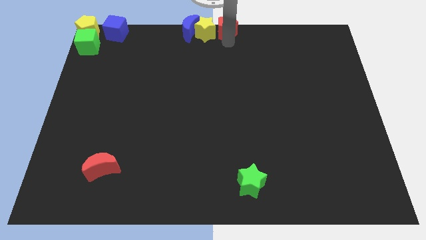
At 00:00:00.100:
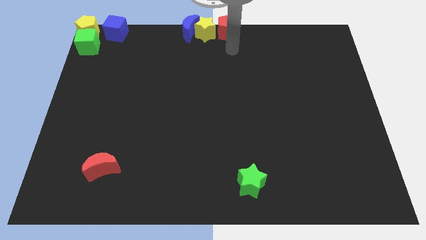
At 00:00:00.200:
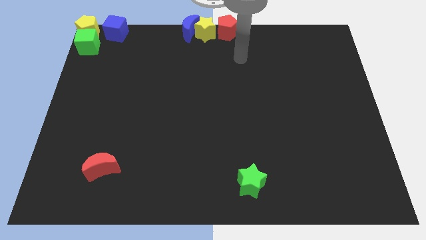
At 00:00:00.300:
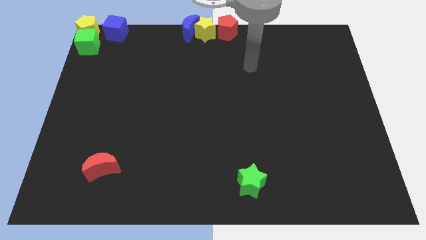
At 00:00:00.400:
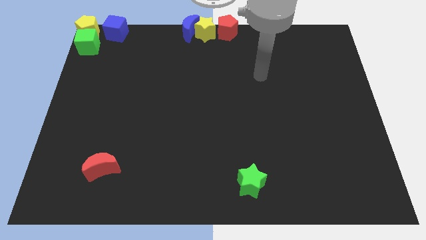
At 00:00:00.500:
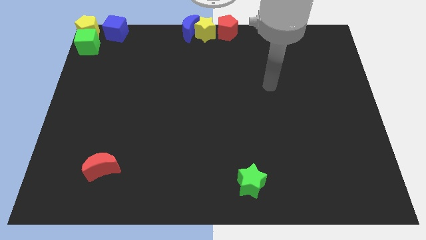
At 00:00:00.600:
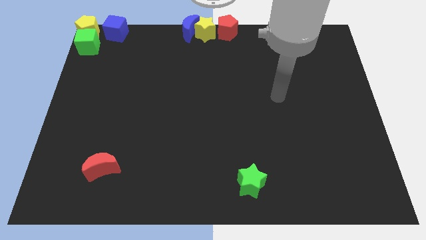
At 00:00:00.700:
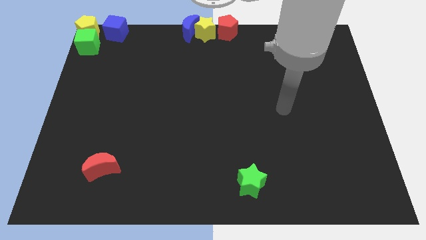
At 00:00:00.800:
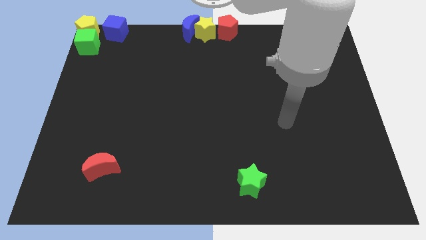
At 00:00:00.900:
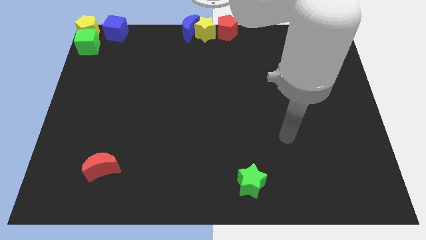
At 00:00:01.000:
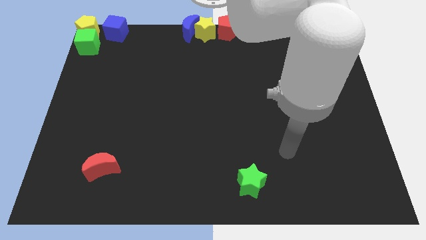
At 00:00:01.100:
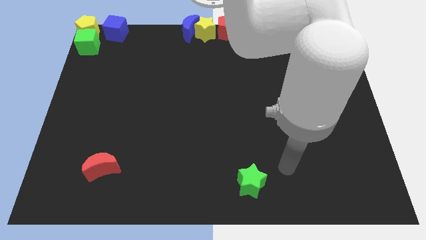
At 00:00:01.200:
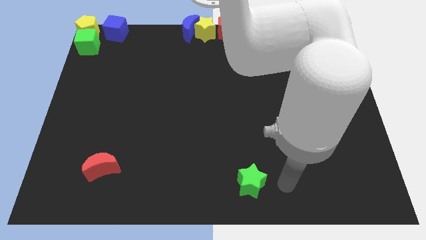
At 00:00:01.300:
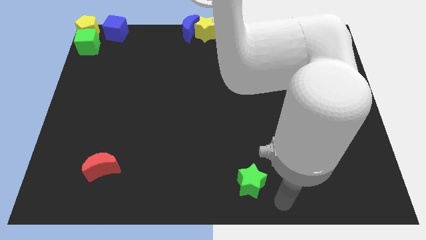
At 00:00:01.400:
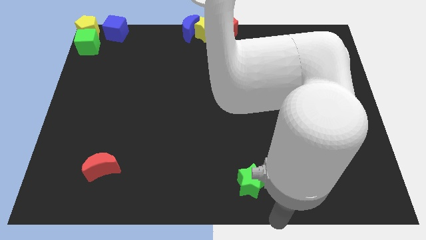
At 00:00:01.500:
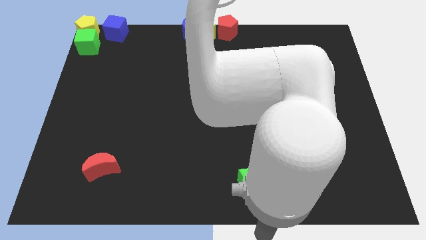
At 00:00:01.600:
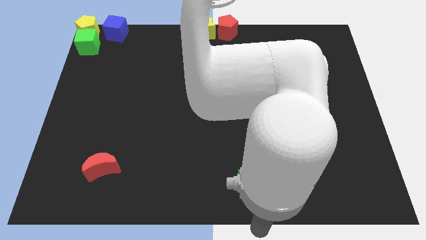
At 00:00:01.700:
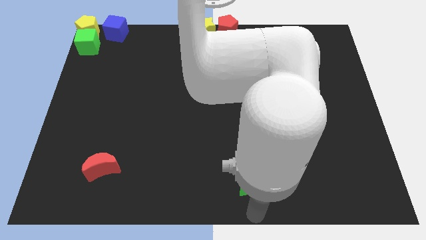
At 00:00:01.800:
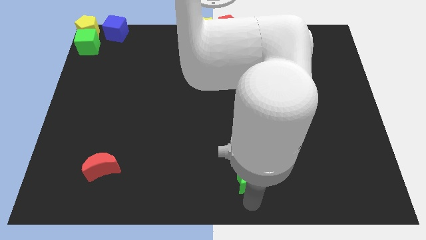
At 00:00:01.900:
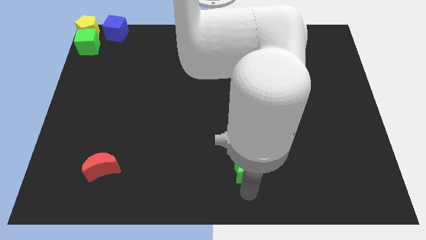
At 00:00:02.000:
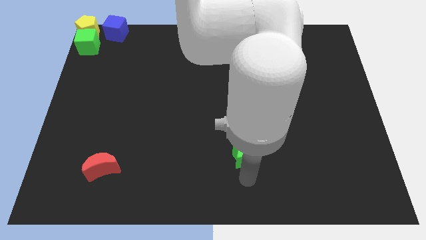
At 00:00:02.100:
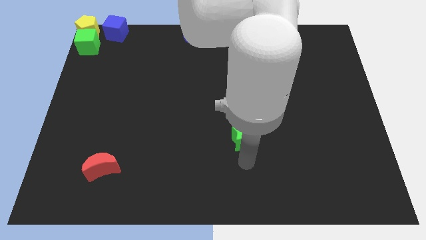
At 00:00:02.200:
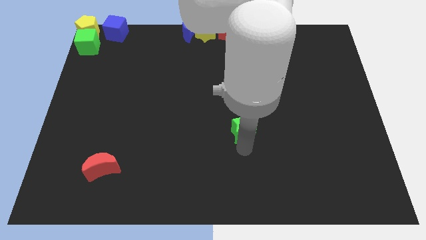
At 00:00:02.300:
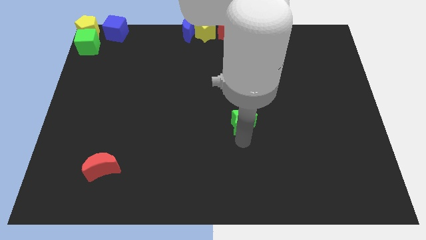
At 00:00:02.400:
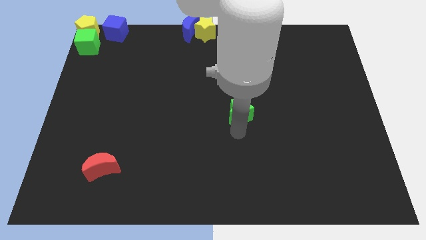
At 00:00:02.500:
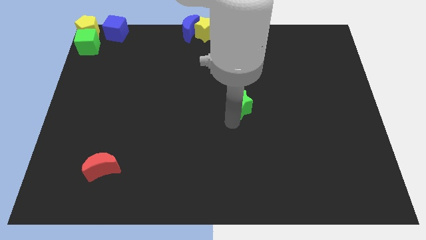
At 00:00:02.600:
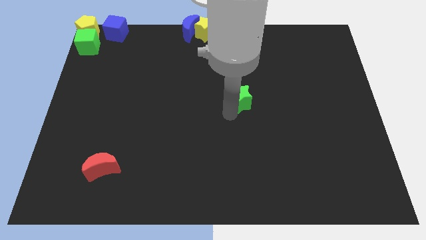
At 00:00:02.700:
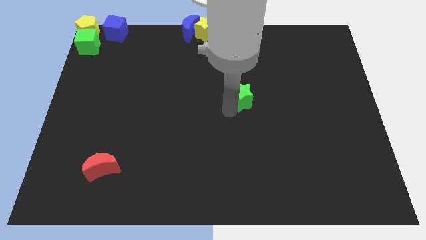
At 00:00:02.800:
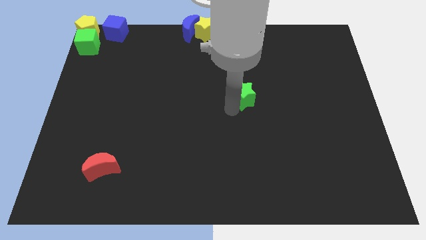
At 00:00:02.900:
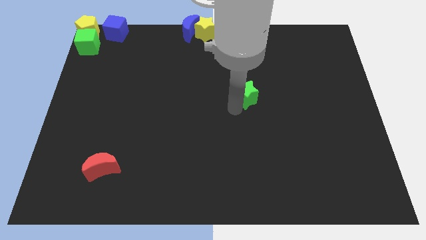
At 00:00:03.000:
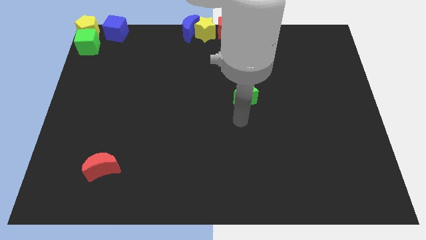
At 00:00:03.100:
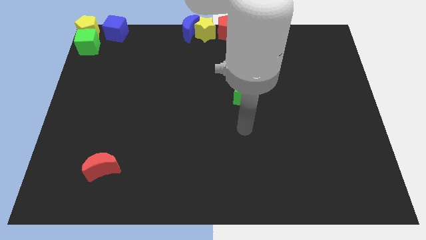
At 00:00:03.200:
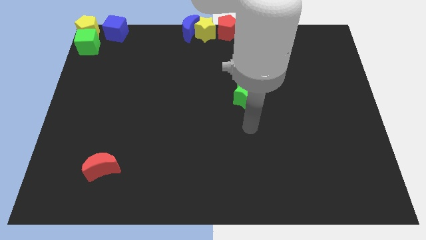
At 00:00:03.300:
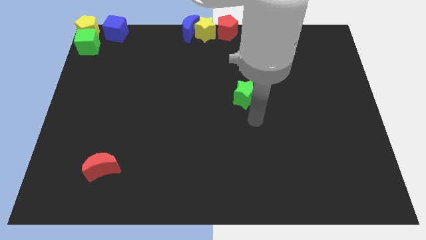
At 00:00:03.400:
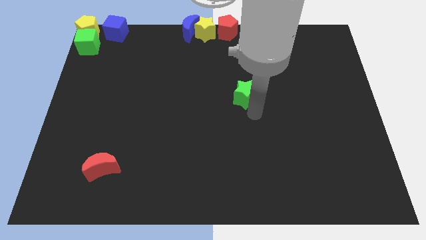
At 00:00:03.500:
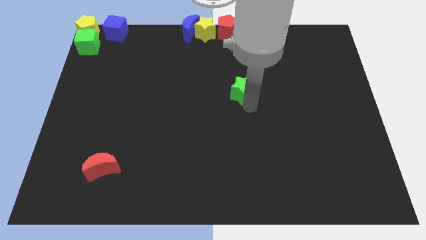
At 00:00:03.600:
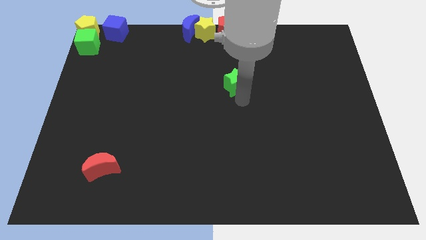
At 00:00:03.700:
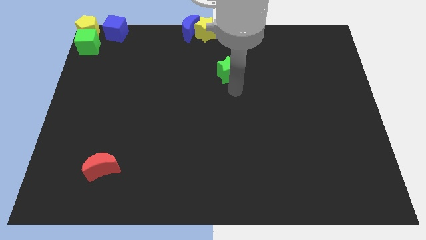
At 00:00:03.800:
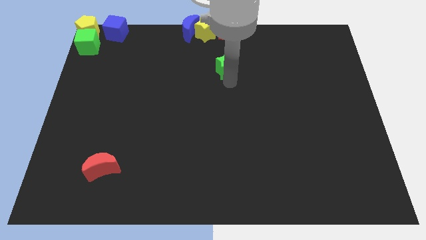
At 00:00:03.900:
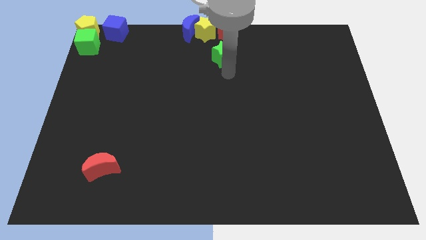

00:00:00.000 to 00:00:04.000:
move the green star towards the top center

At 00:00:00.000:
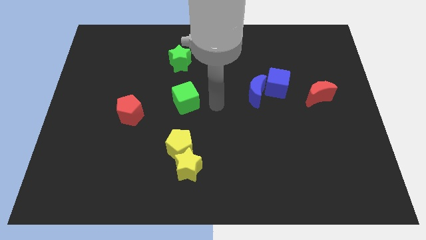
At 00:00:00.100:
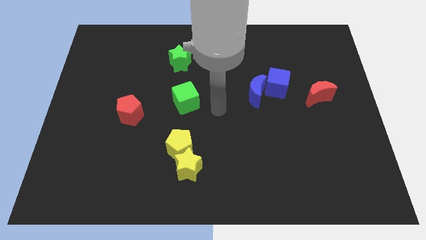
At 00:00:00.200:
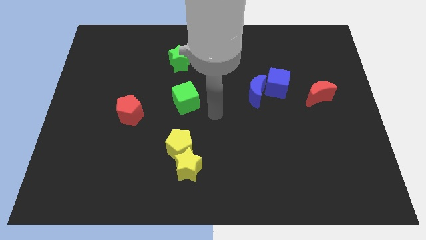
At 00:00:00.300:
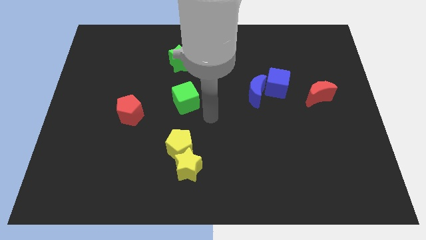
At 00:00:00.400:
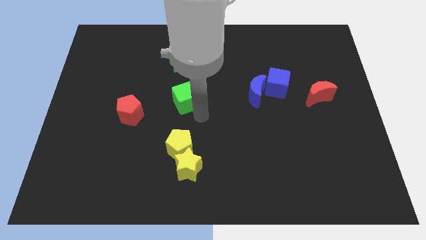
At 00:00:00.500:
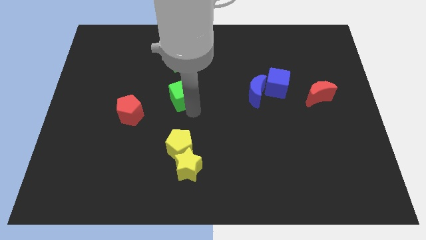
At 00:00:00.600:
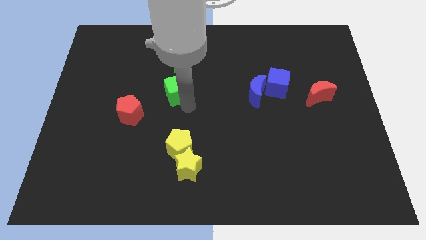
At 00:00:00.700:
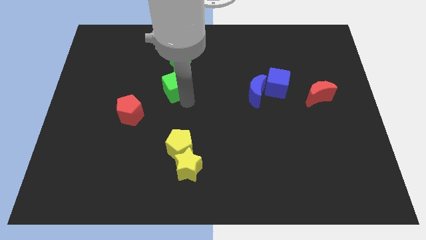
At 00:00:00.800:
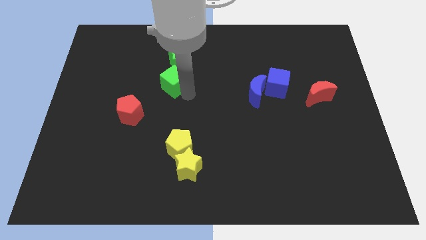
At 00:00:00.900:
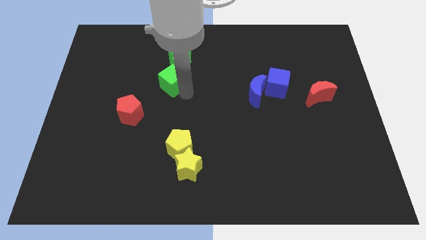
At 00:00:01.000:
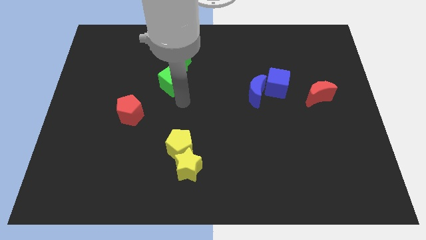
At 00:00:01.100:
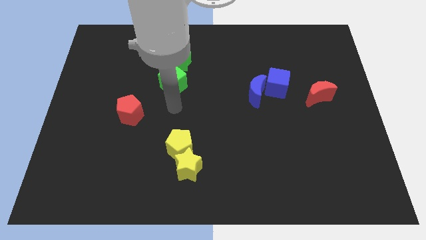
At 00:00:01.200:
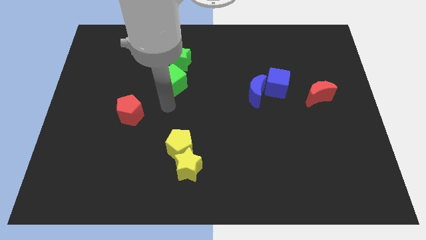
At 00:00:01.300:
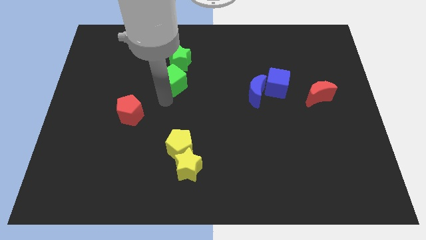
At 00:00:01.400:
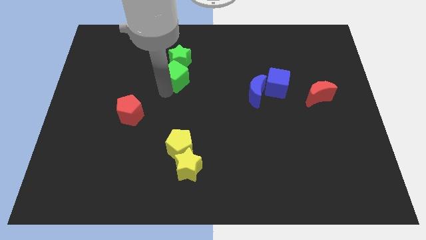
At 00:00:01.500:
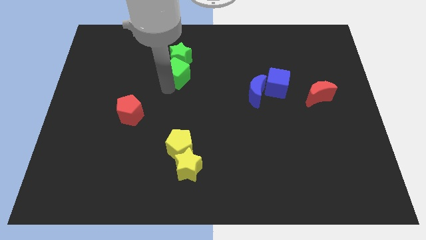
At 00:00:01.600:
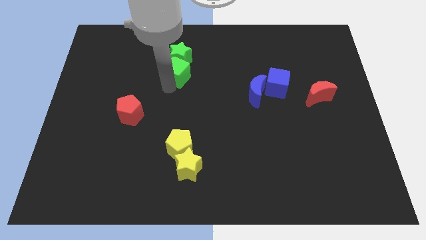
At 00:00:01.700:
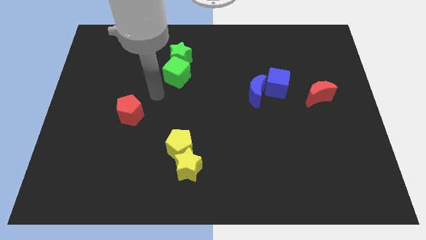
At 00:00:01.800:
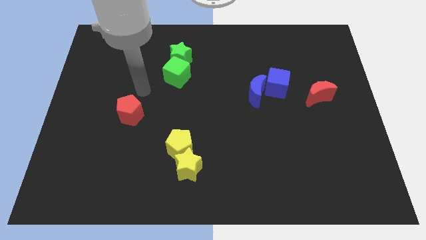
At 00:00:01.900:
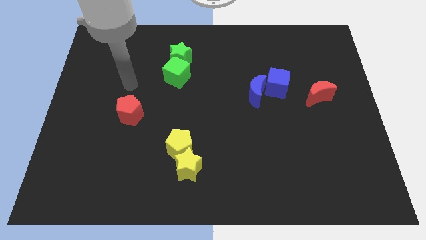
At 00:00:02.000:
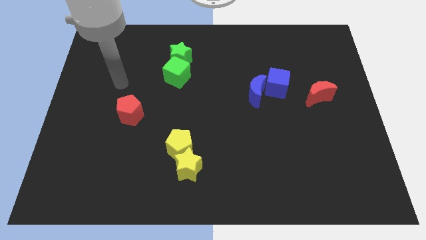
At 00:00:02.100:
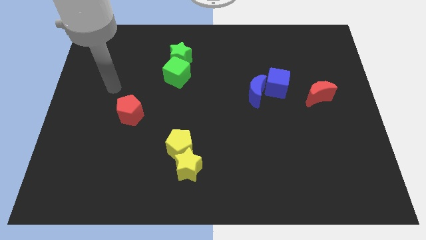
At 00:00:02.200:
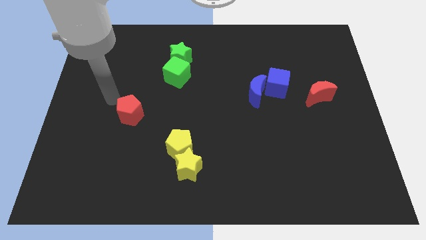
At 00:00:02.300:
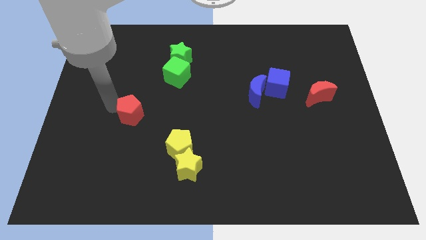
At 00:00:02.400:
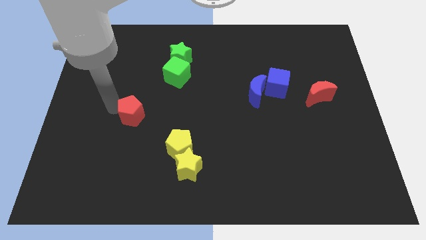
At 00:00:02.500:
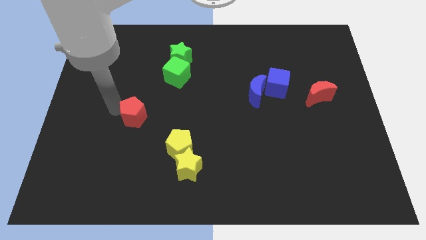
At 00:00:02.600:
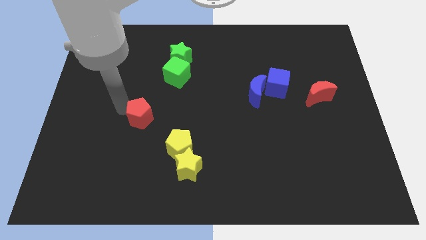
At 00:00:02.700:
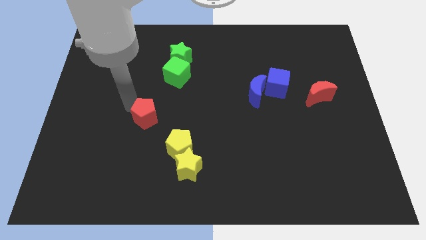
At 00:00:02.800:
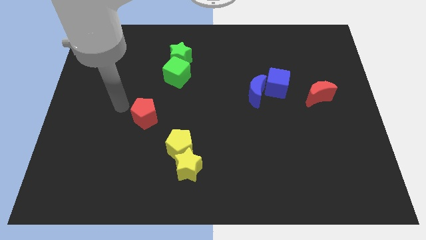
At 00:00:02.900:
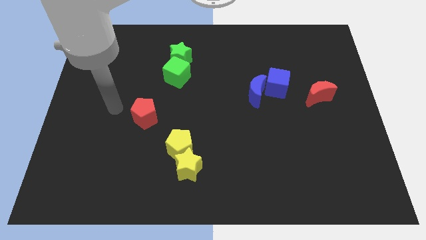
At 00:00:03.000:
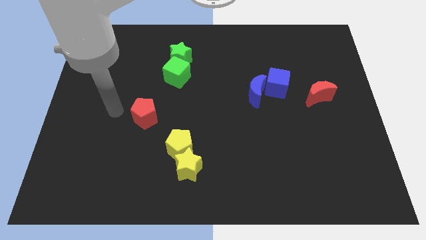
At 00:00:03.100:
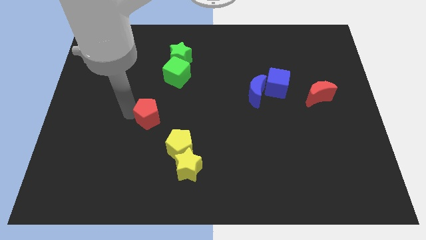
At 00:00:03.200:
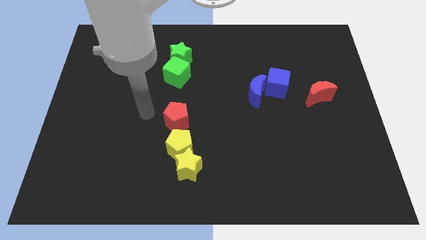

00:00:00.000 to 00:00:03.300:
push the red pentagon vertically above the yellow pentagon

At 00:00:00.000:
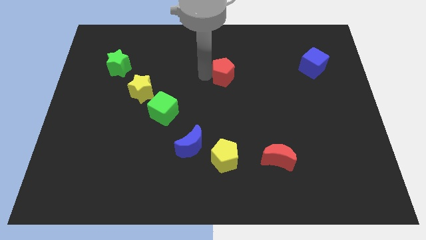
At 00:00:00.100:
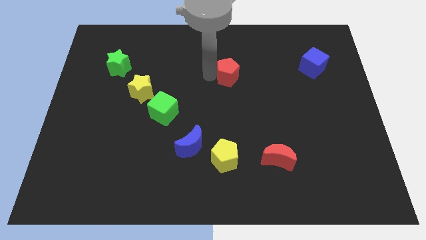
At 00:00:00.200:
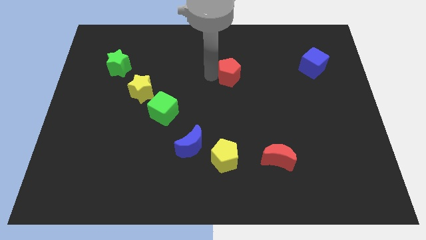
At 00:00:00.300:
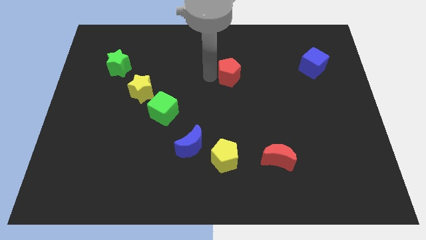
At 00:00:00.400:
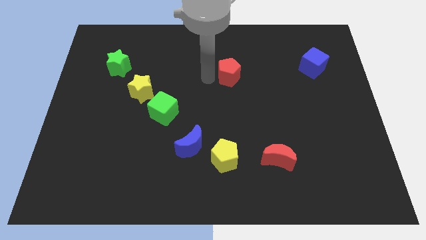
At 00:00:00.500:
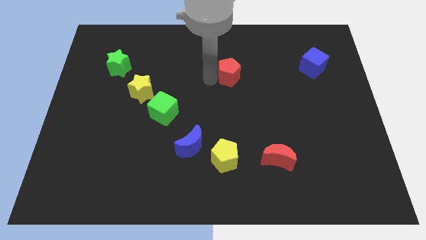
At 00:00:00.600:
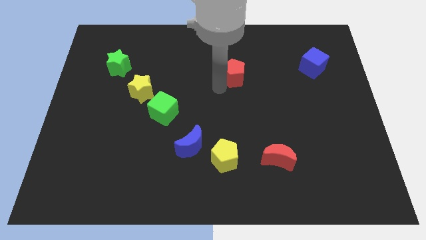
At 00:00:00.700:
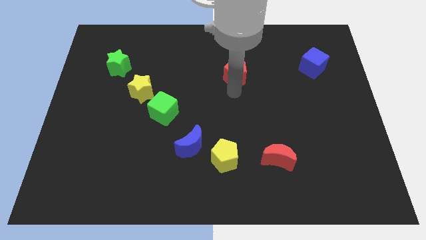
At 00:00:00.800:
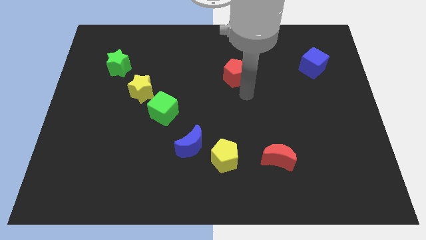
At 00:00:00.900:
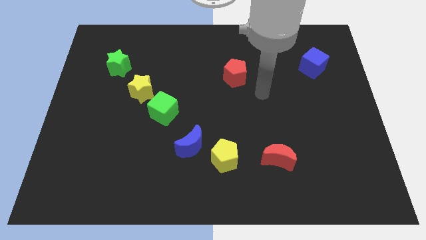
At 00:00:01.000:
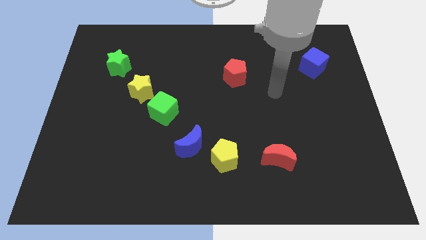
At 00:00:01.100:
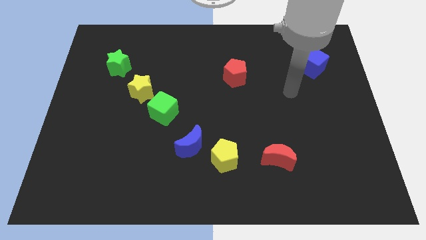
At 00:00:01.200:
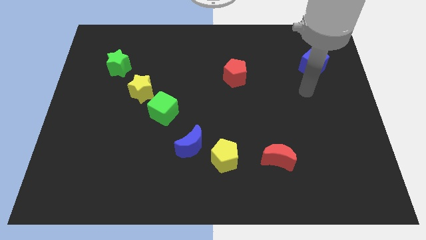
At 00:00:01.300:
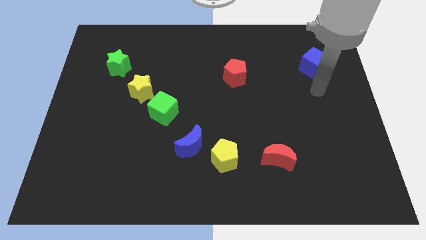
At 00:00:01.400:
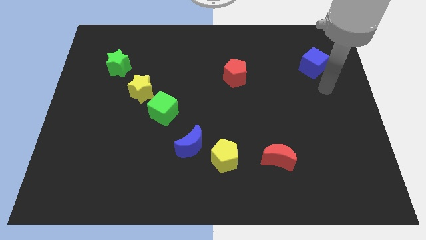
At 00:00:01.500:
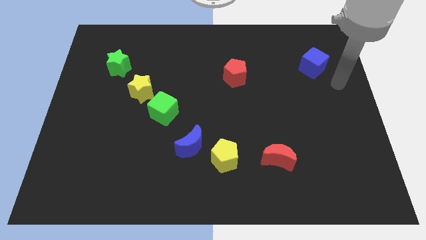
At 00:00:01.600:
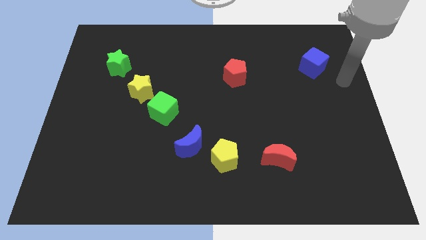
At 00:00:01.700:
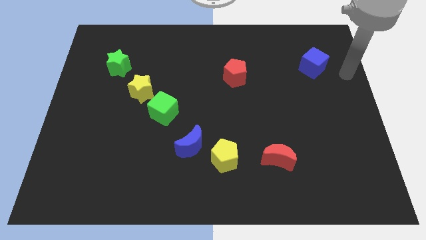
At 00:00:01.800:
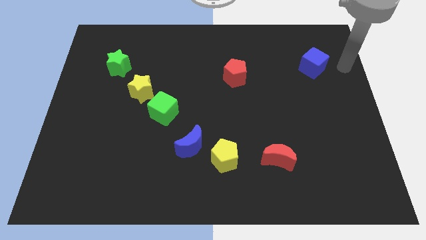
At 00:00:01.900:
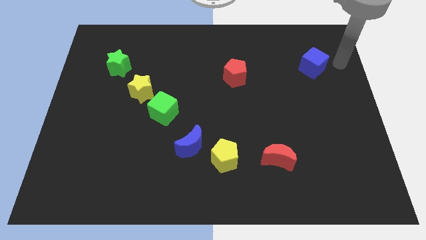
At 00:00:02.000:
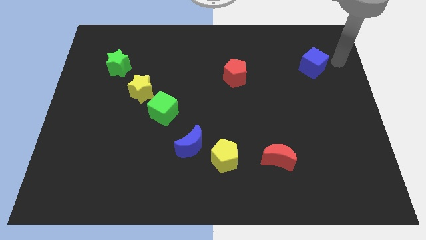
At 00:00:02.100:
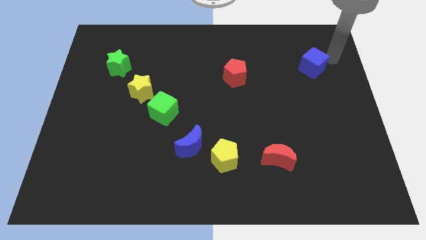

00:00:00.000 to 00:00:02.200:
move the arm around the blue cube
